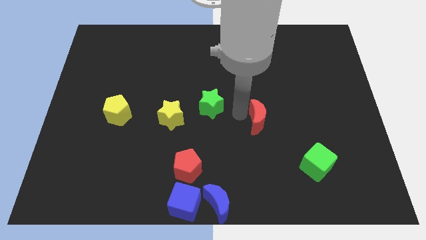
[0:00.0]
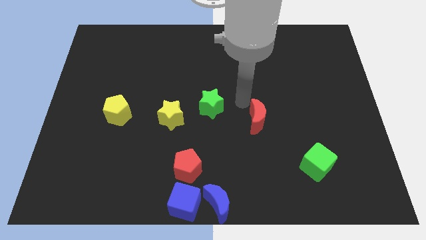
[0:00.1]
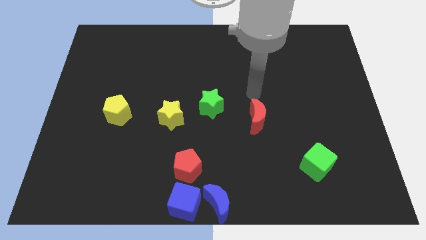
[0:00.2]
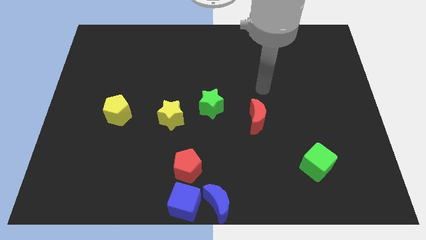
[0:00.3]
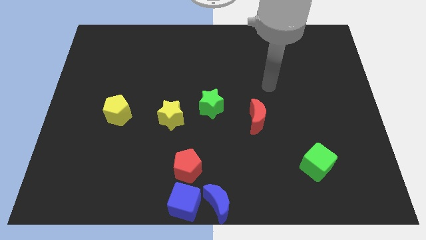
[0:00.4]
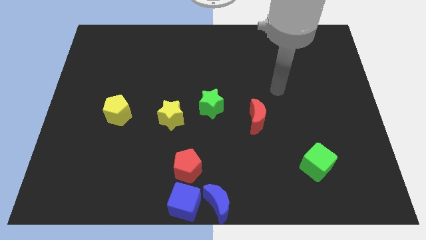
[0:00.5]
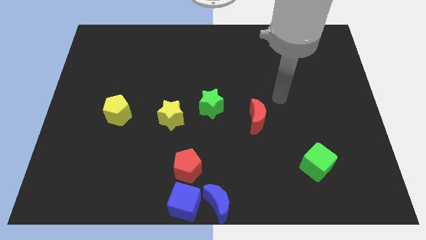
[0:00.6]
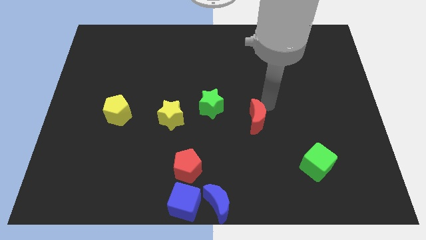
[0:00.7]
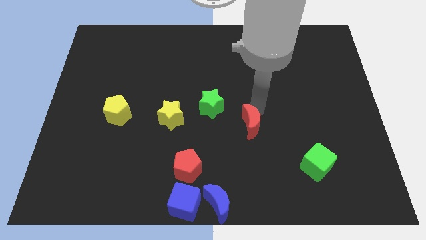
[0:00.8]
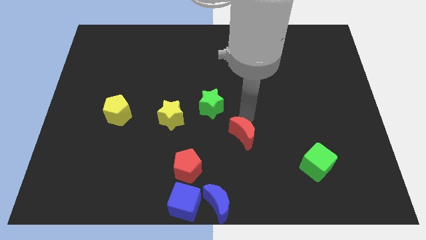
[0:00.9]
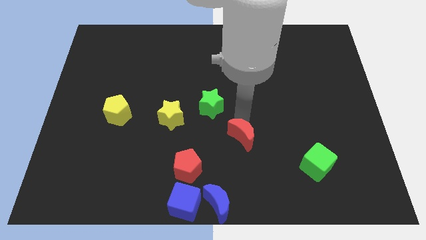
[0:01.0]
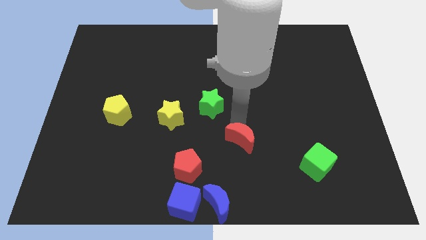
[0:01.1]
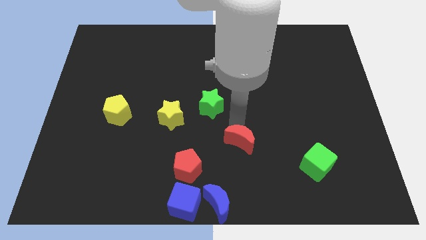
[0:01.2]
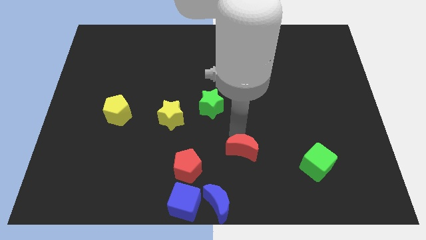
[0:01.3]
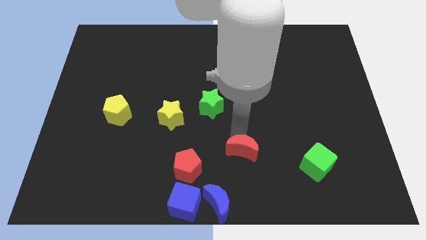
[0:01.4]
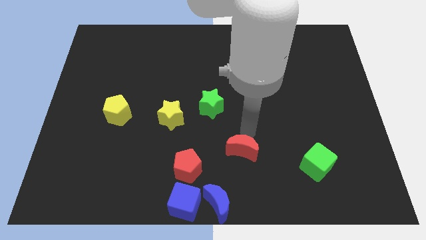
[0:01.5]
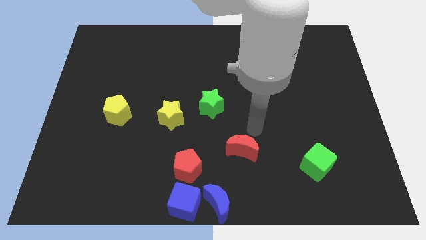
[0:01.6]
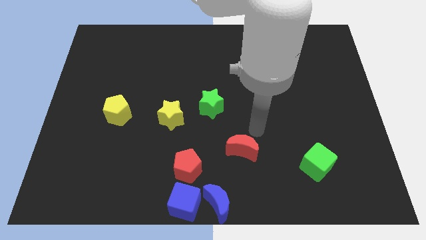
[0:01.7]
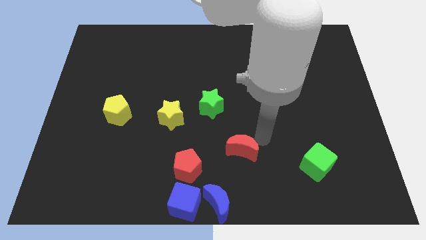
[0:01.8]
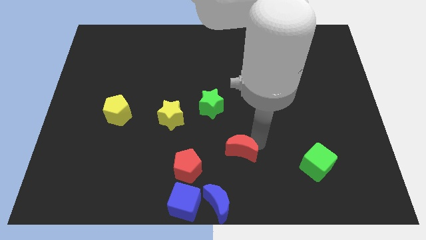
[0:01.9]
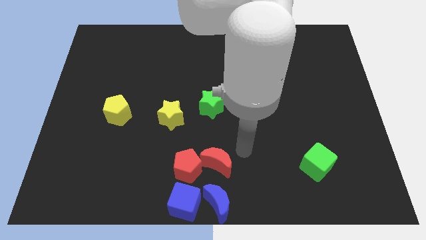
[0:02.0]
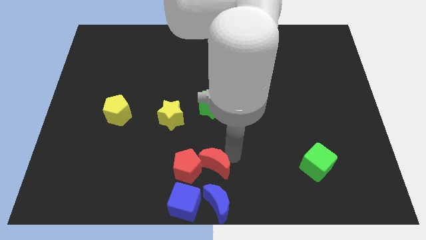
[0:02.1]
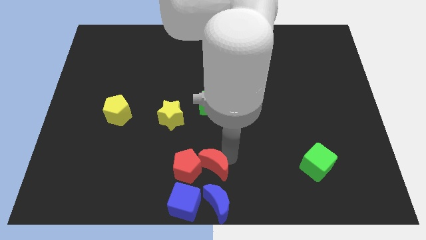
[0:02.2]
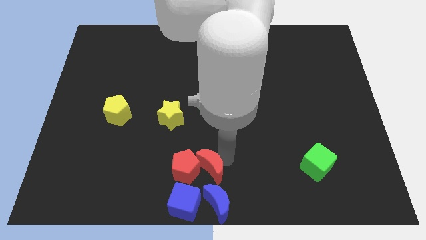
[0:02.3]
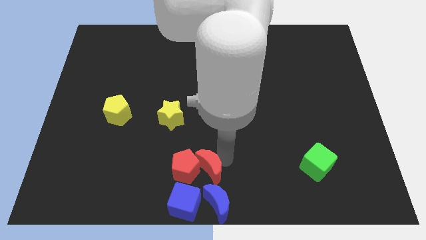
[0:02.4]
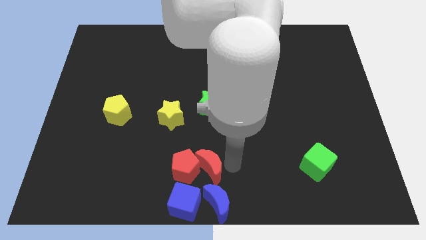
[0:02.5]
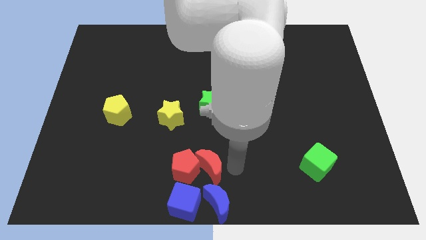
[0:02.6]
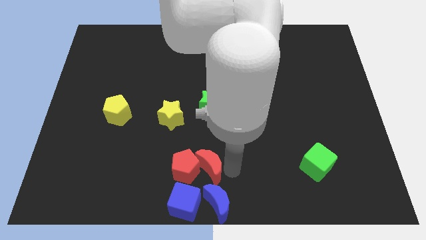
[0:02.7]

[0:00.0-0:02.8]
push the red crescent into the red pentagon

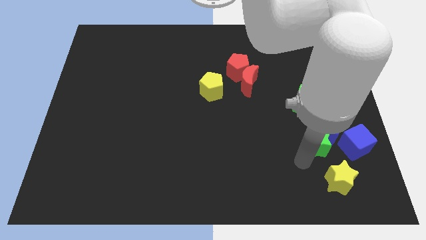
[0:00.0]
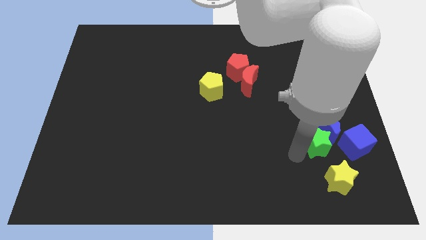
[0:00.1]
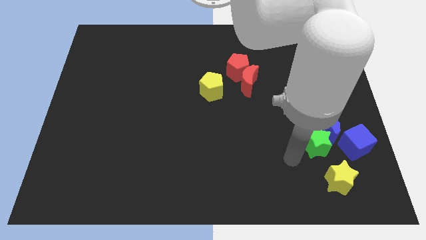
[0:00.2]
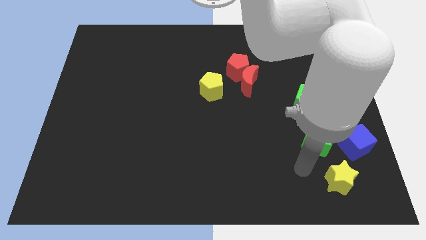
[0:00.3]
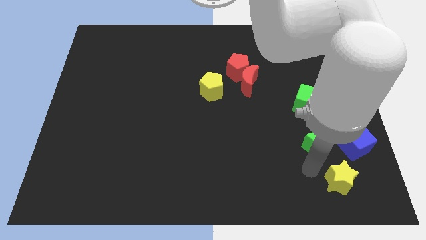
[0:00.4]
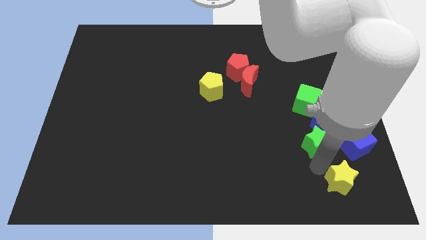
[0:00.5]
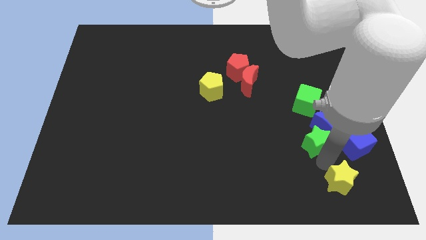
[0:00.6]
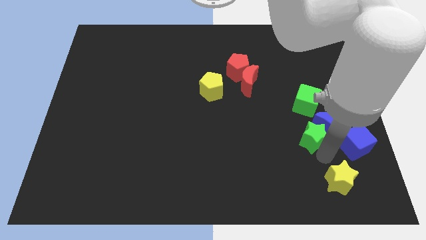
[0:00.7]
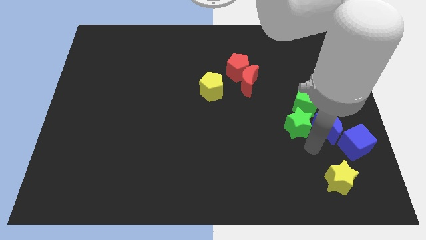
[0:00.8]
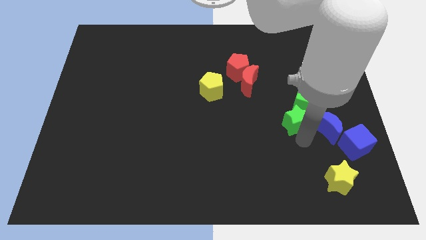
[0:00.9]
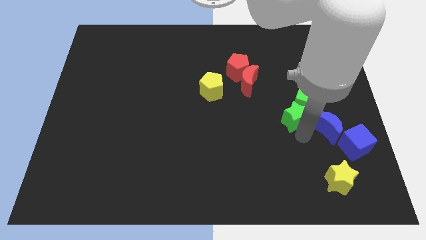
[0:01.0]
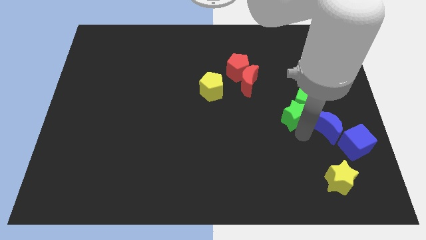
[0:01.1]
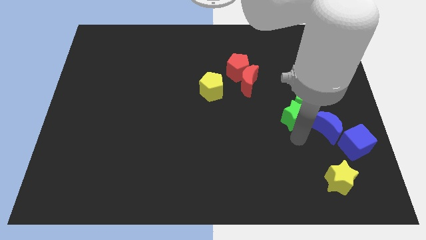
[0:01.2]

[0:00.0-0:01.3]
push the green star below the green cube

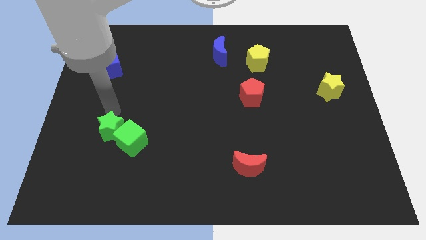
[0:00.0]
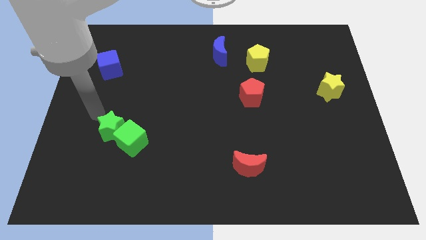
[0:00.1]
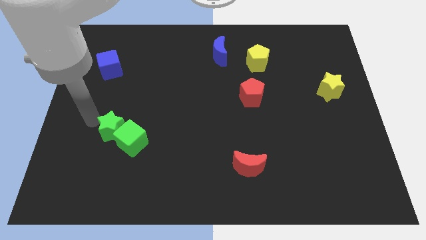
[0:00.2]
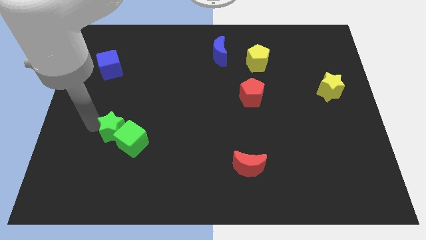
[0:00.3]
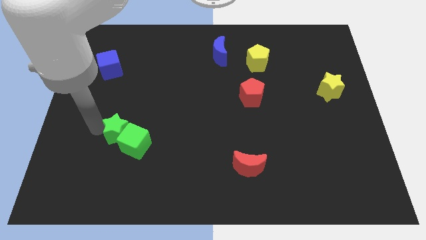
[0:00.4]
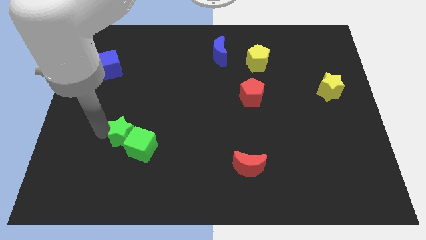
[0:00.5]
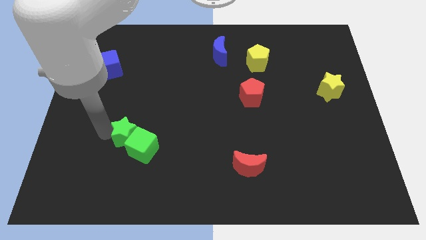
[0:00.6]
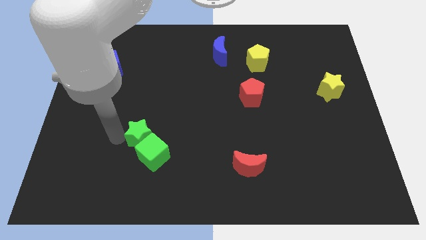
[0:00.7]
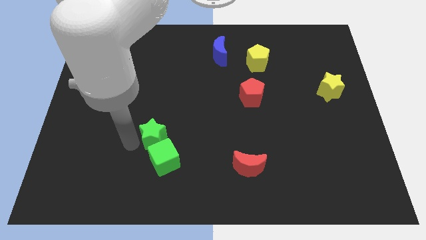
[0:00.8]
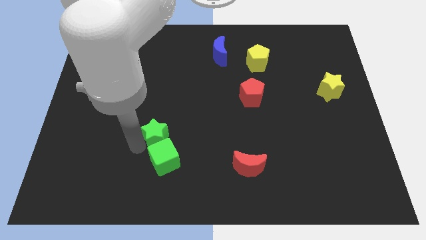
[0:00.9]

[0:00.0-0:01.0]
move green blocks towards red moon

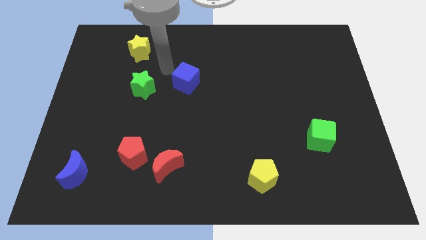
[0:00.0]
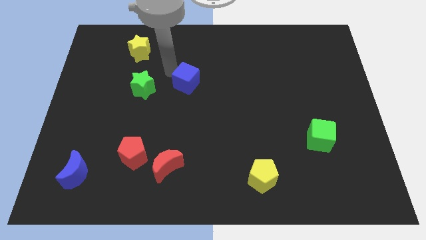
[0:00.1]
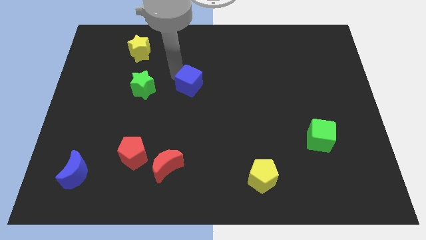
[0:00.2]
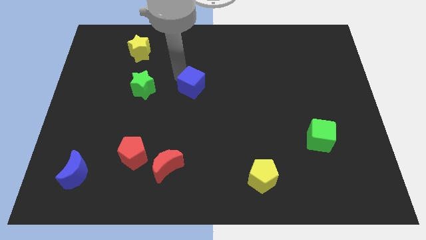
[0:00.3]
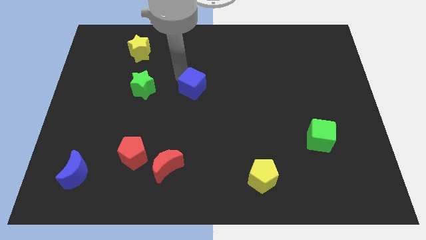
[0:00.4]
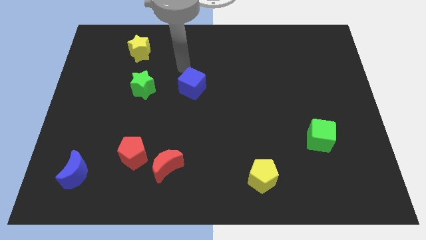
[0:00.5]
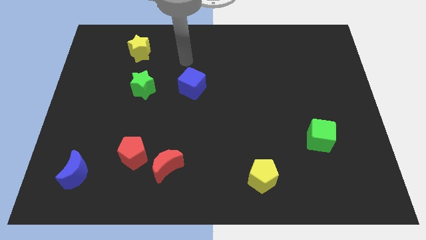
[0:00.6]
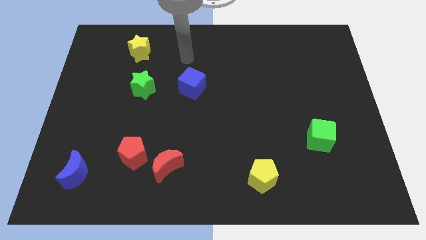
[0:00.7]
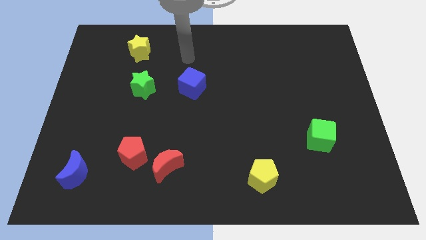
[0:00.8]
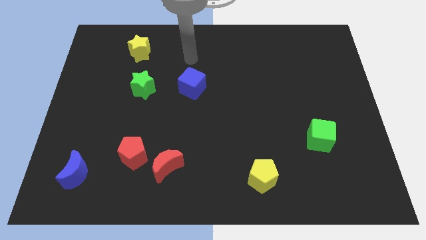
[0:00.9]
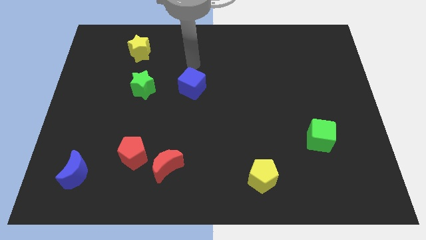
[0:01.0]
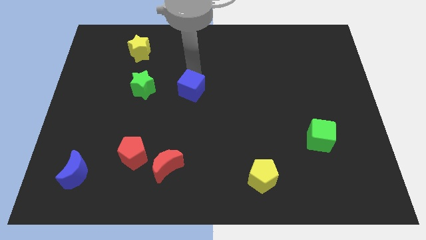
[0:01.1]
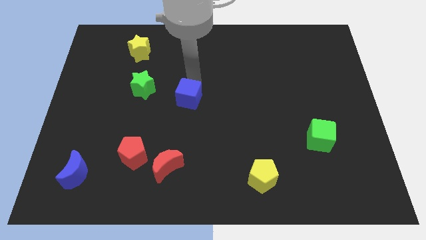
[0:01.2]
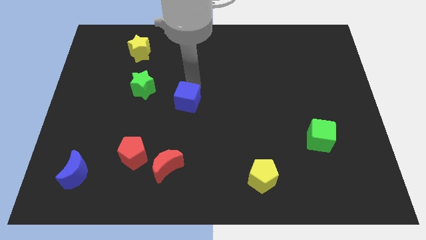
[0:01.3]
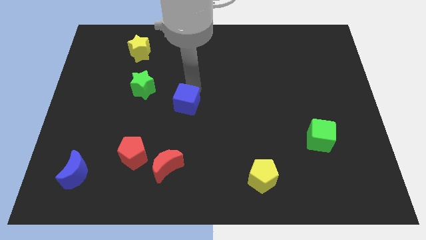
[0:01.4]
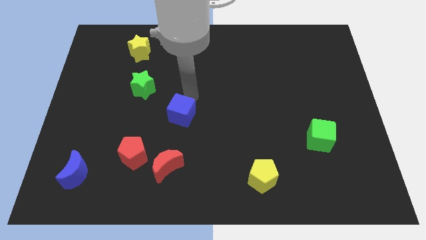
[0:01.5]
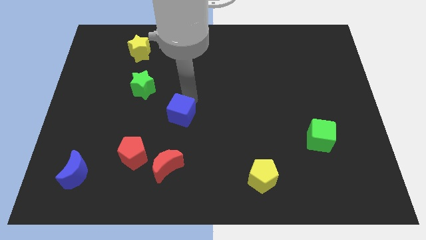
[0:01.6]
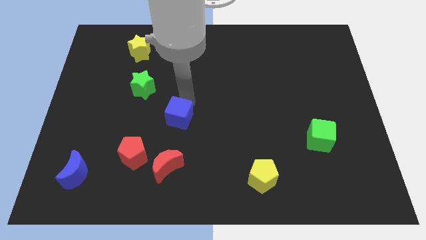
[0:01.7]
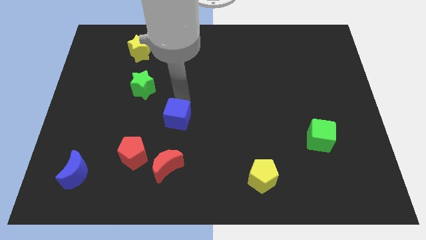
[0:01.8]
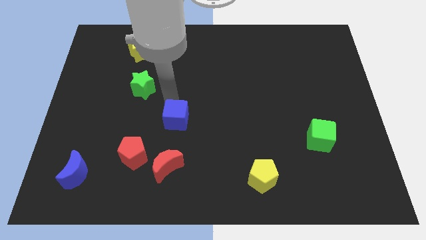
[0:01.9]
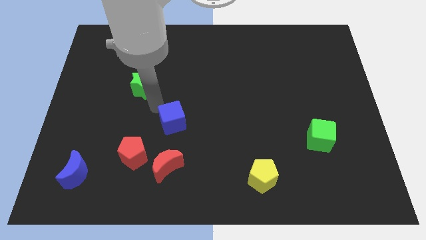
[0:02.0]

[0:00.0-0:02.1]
place the blue cube above the red moon

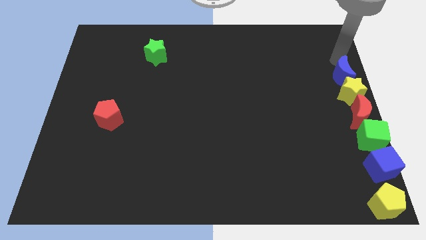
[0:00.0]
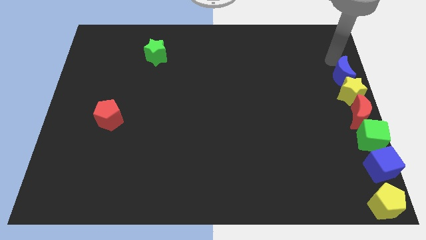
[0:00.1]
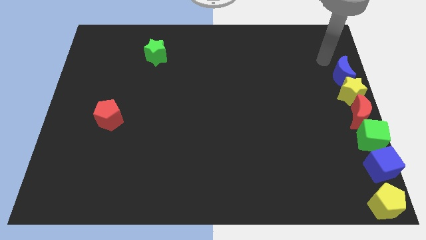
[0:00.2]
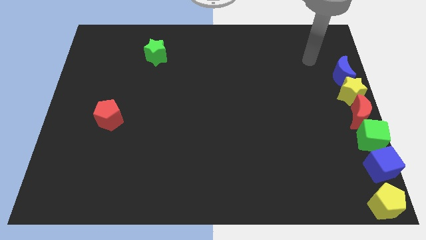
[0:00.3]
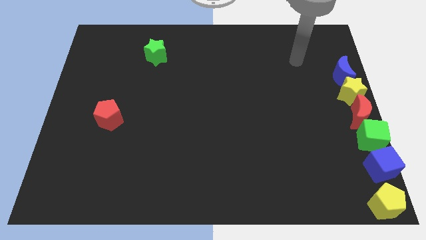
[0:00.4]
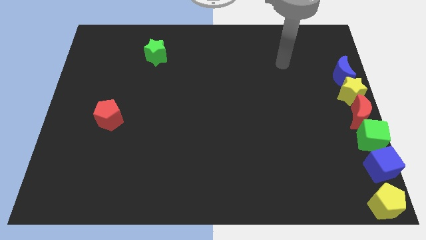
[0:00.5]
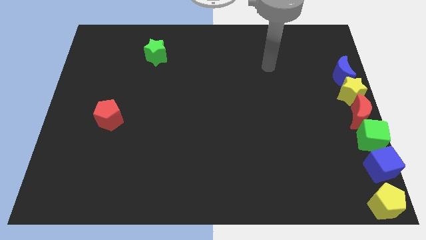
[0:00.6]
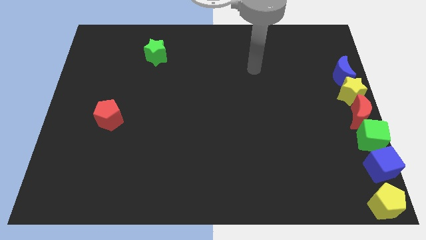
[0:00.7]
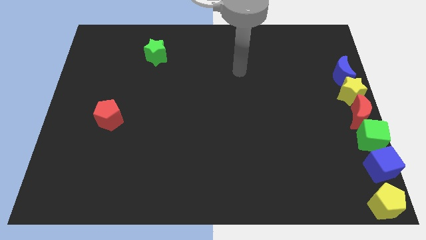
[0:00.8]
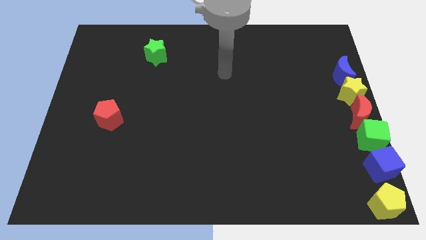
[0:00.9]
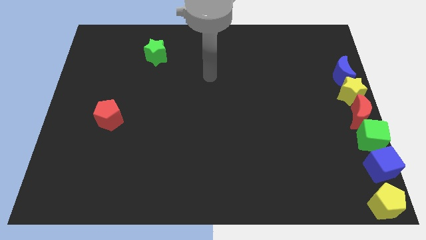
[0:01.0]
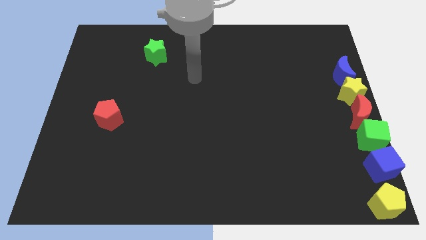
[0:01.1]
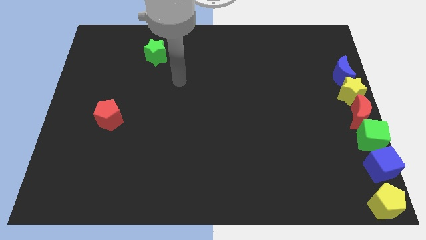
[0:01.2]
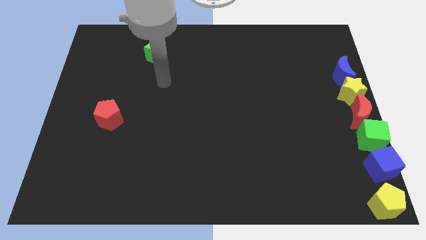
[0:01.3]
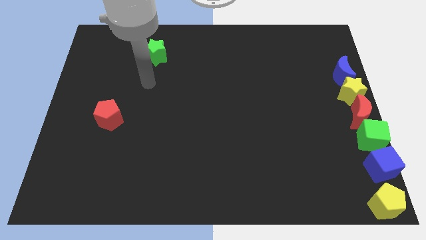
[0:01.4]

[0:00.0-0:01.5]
move your arm away from the blue moon

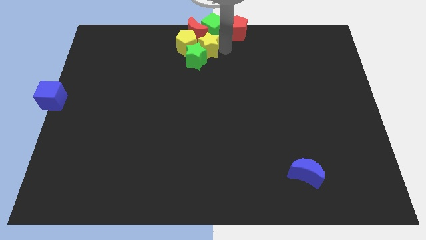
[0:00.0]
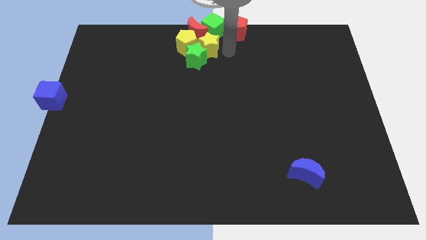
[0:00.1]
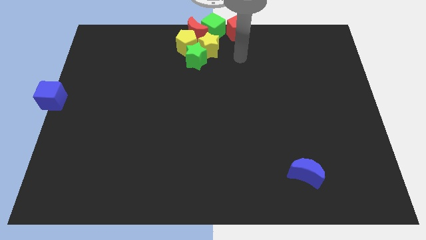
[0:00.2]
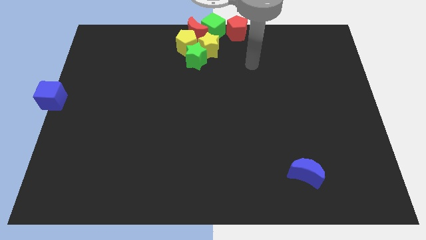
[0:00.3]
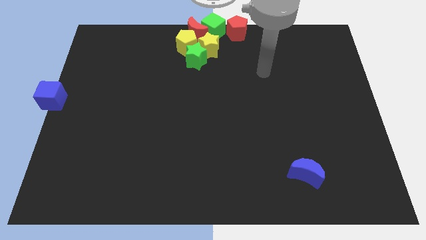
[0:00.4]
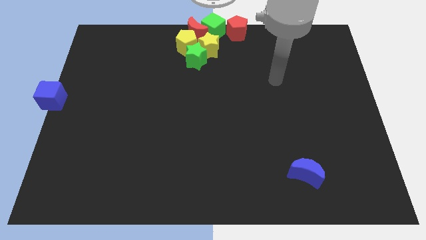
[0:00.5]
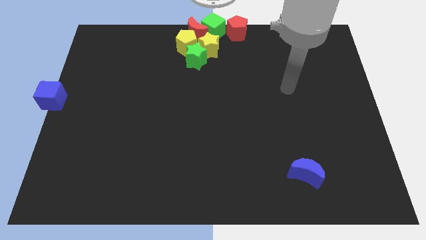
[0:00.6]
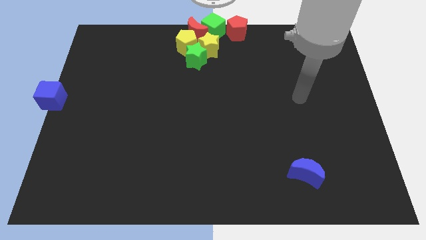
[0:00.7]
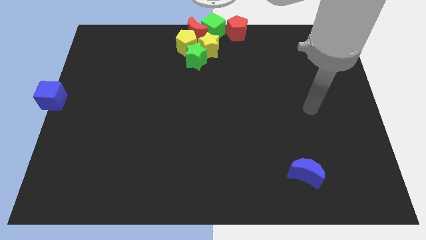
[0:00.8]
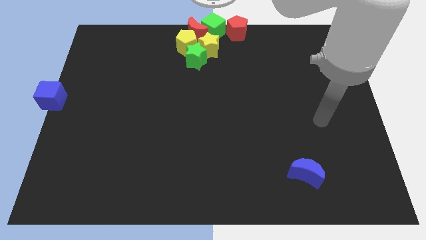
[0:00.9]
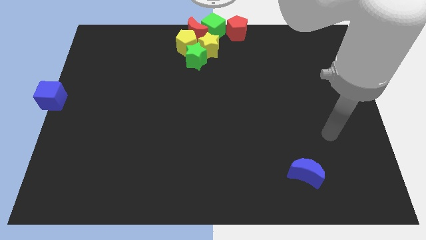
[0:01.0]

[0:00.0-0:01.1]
move the arm away from the yellow star
